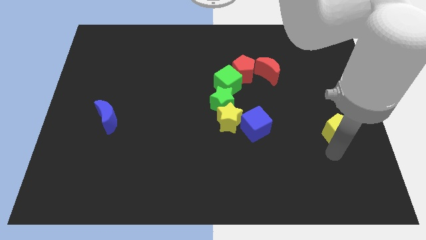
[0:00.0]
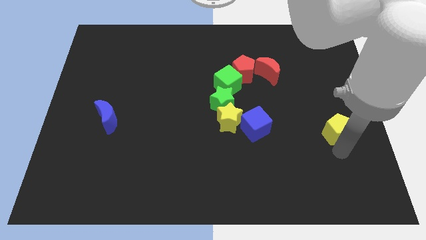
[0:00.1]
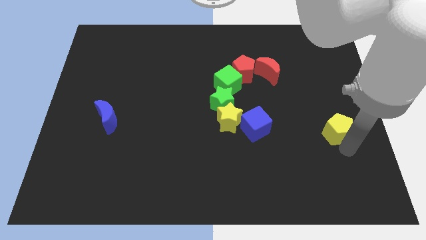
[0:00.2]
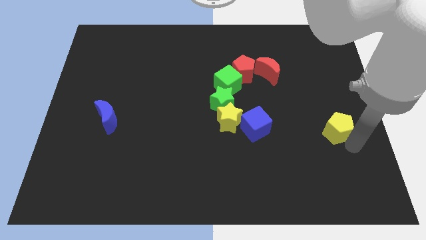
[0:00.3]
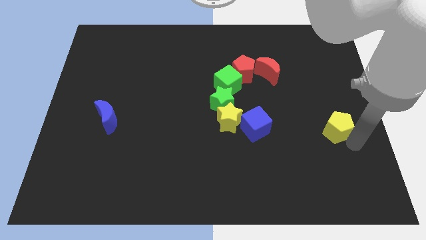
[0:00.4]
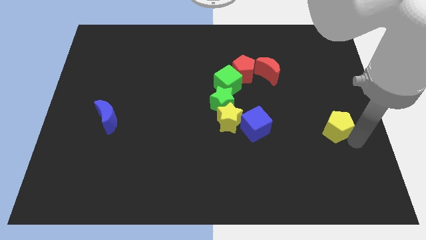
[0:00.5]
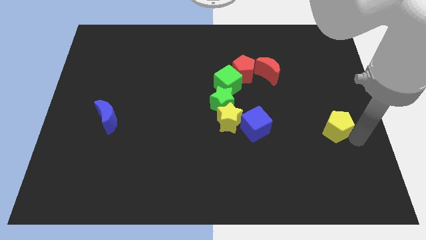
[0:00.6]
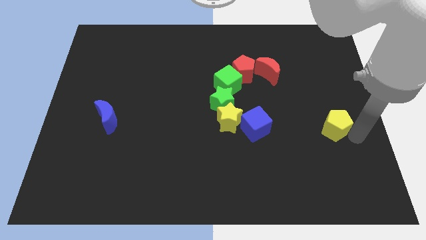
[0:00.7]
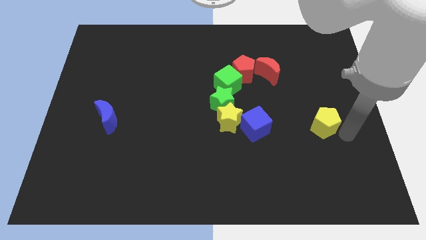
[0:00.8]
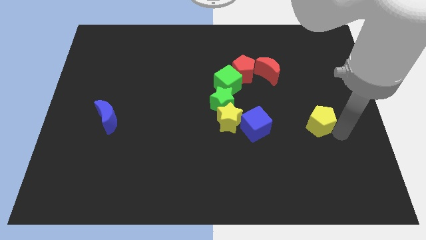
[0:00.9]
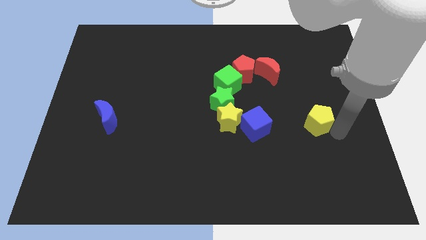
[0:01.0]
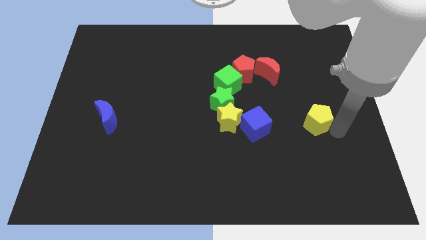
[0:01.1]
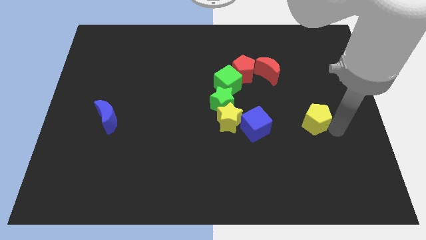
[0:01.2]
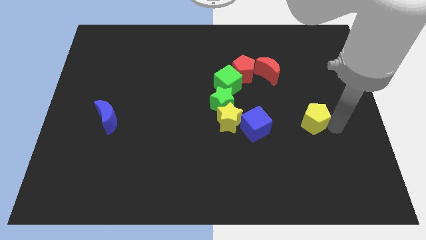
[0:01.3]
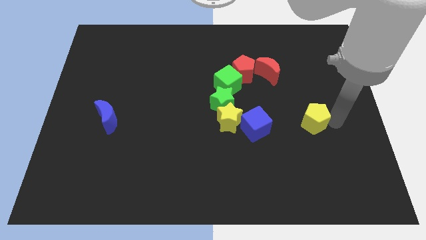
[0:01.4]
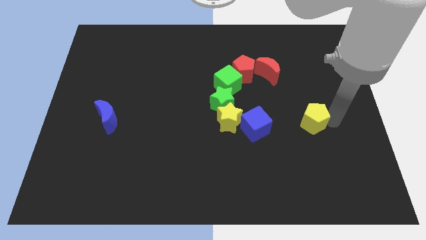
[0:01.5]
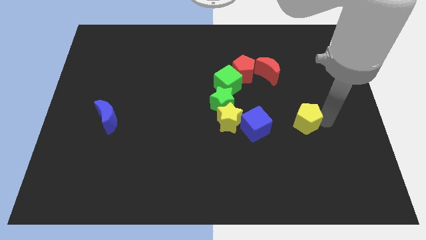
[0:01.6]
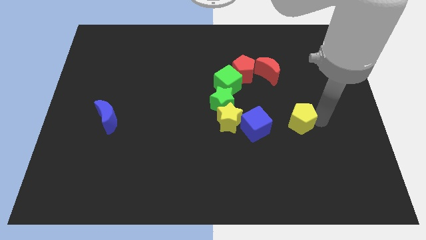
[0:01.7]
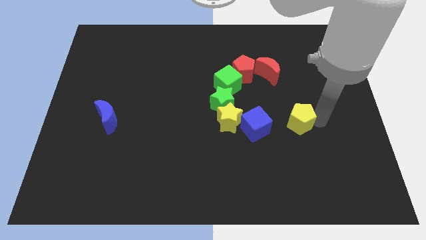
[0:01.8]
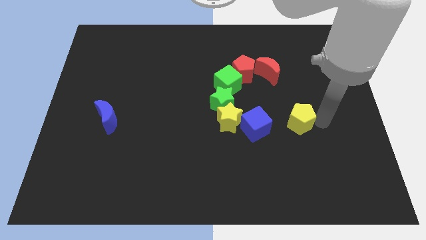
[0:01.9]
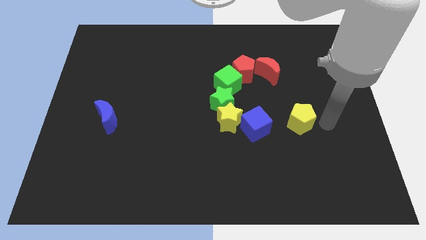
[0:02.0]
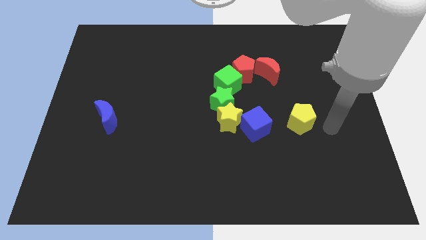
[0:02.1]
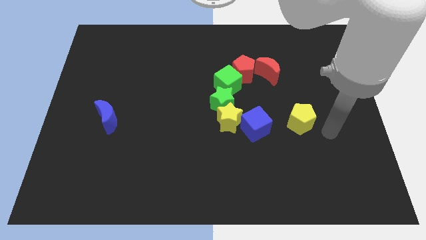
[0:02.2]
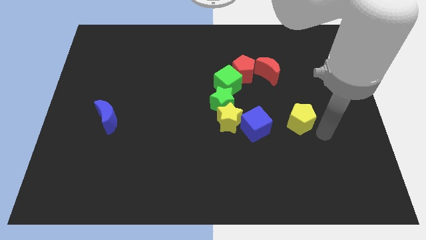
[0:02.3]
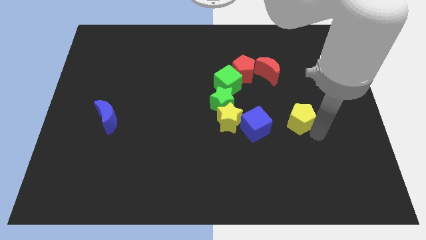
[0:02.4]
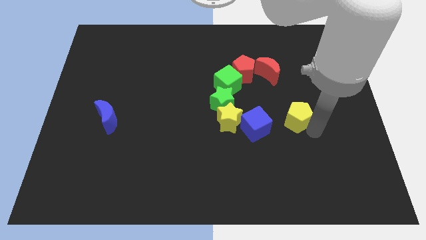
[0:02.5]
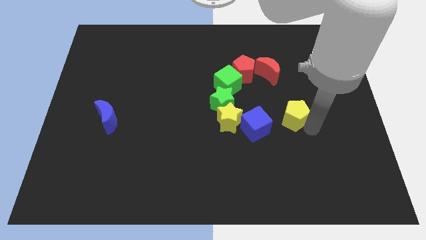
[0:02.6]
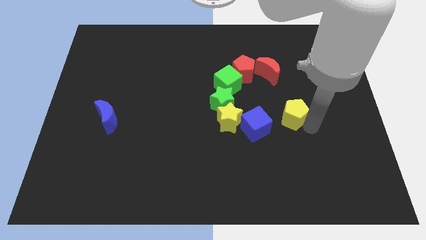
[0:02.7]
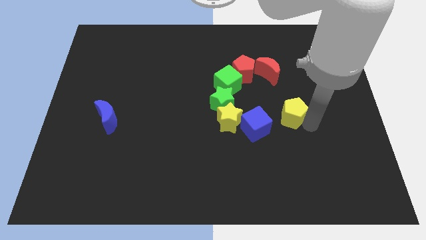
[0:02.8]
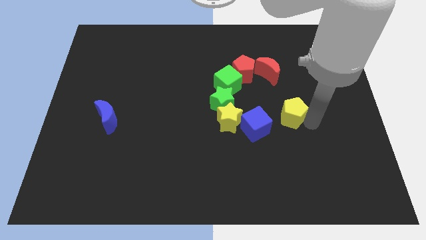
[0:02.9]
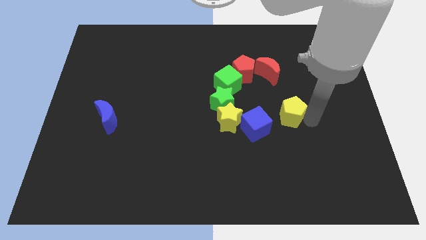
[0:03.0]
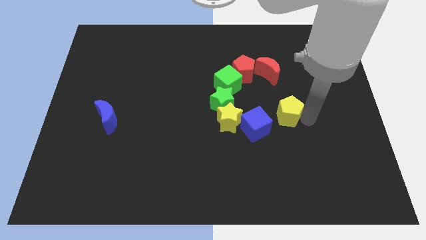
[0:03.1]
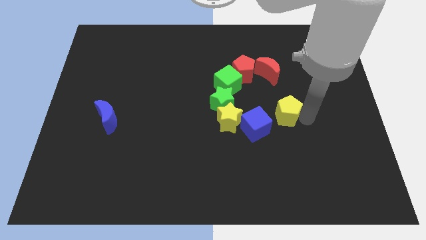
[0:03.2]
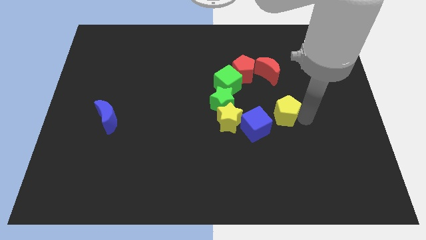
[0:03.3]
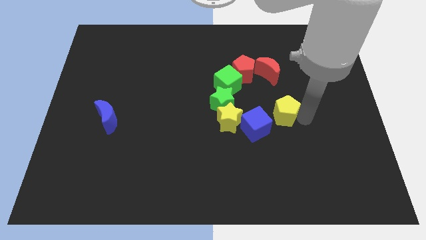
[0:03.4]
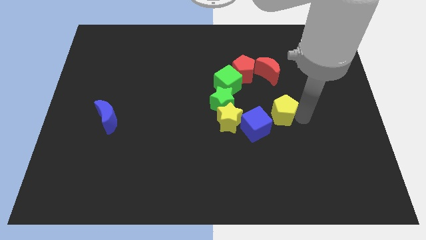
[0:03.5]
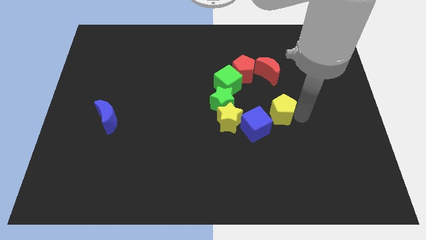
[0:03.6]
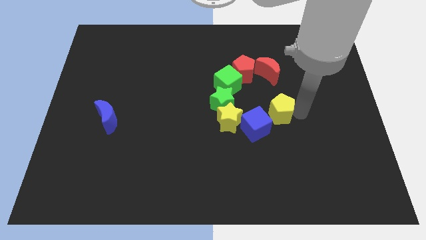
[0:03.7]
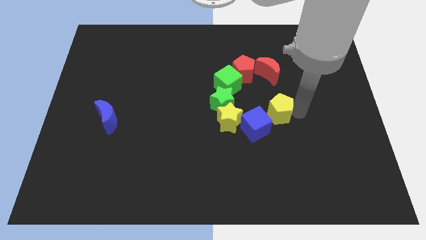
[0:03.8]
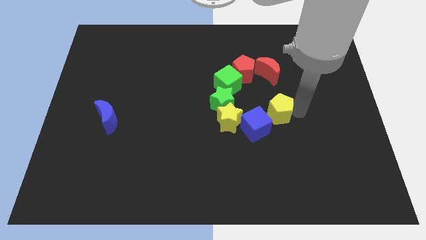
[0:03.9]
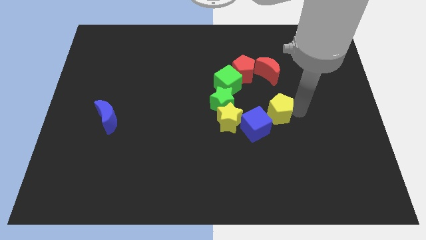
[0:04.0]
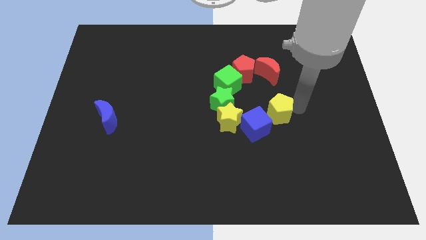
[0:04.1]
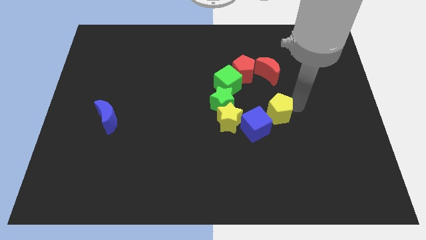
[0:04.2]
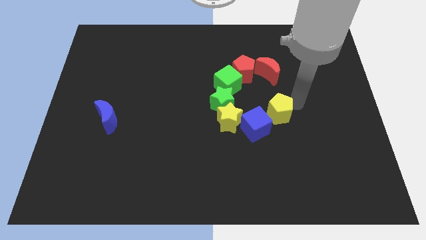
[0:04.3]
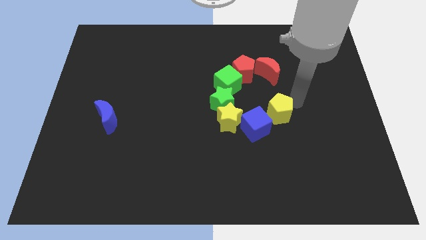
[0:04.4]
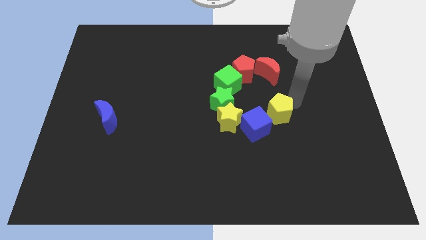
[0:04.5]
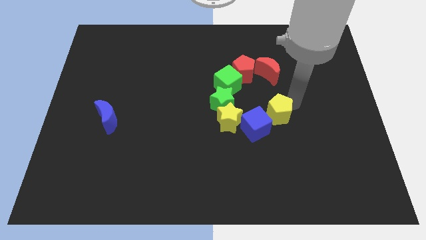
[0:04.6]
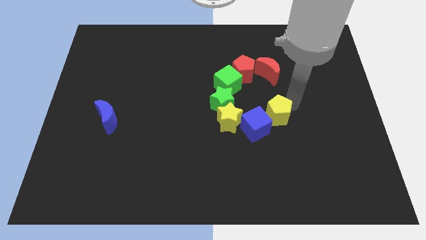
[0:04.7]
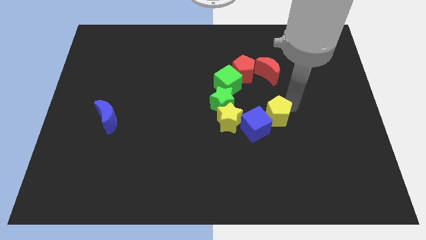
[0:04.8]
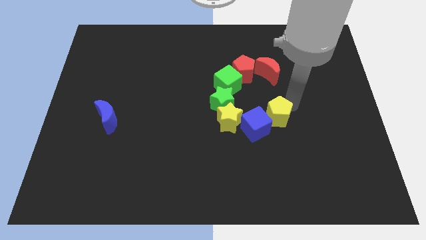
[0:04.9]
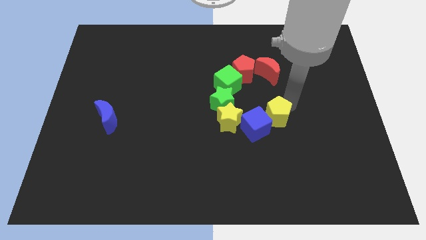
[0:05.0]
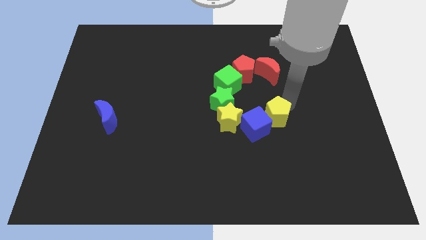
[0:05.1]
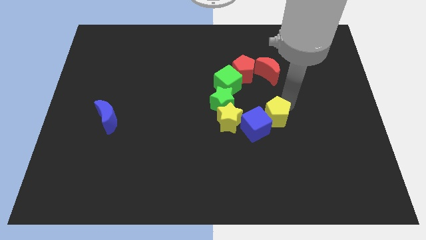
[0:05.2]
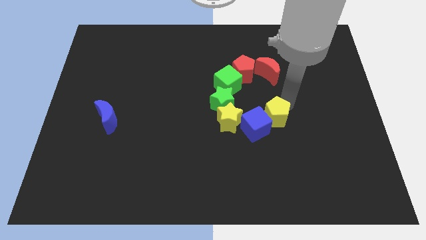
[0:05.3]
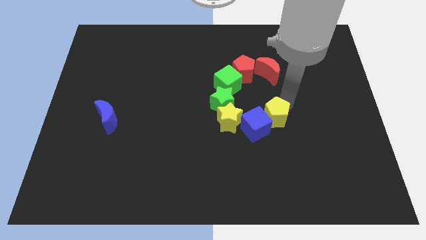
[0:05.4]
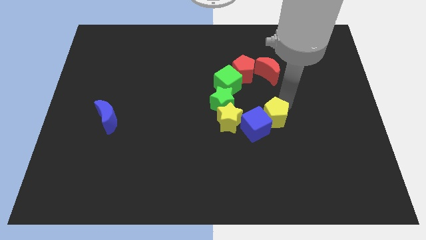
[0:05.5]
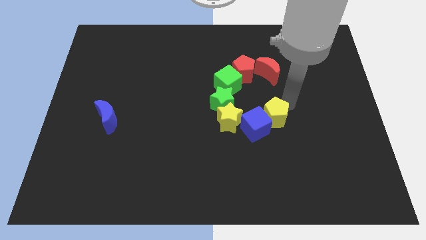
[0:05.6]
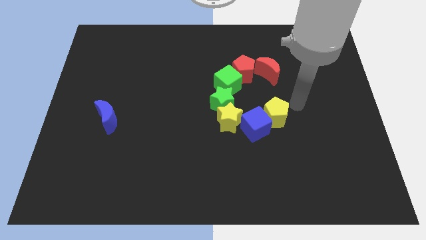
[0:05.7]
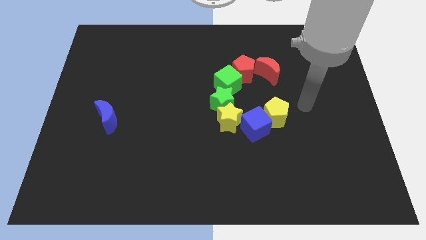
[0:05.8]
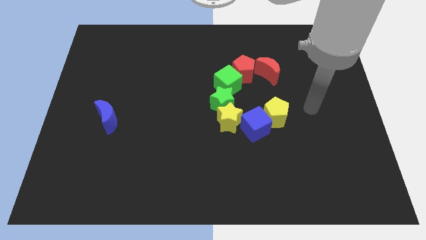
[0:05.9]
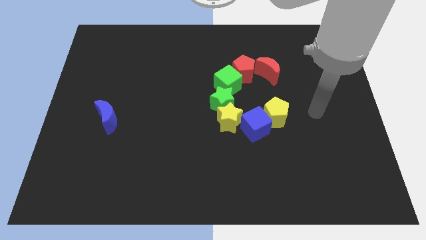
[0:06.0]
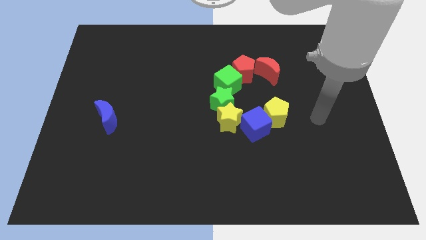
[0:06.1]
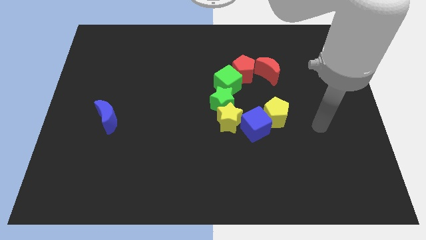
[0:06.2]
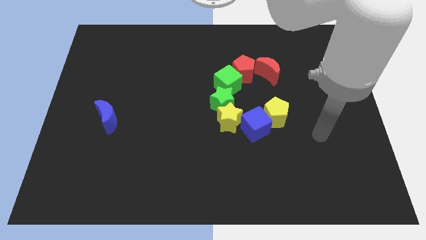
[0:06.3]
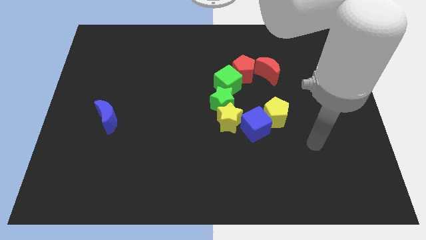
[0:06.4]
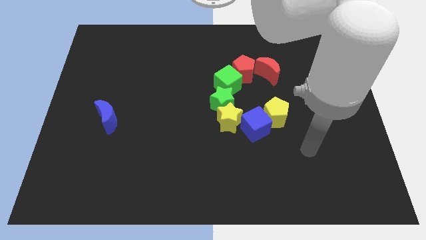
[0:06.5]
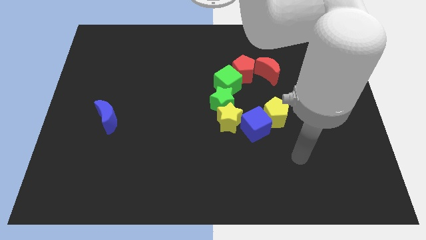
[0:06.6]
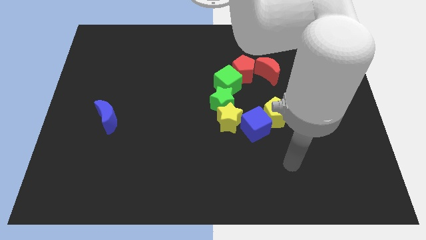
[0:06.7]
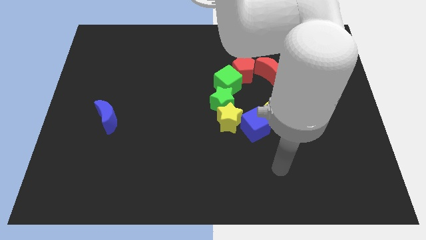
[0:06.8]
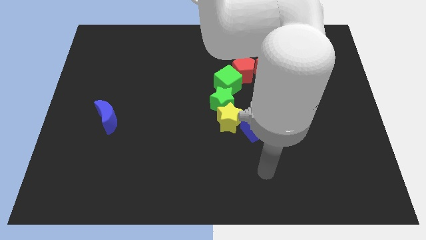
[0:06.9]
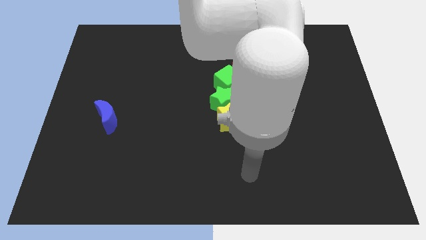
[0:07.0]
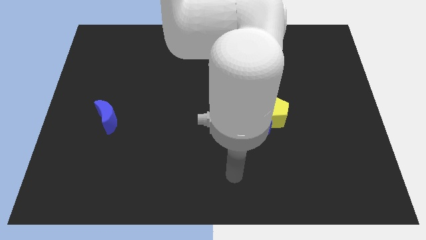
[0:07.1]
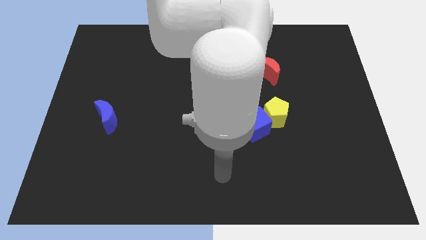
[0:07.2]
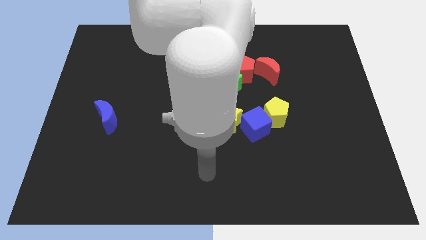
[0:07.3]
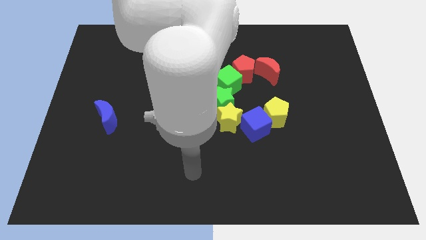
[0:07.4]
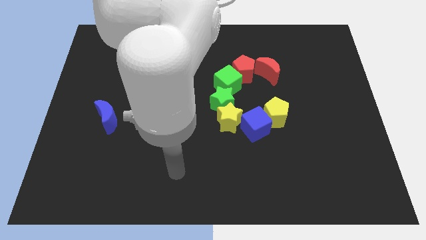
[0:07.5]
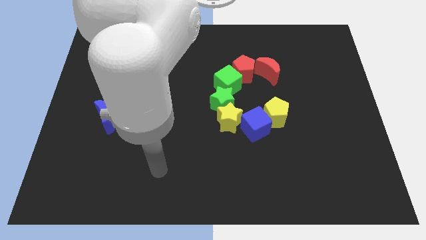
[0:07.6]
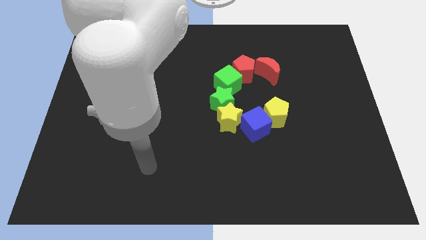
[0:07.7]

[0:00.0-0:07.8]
place yellow pentagon close to blue cube

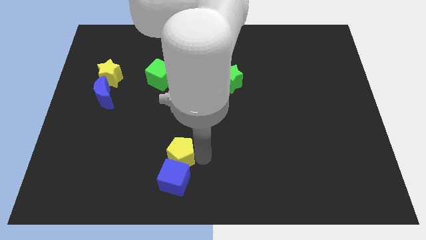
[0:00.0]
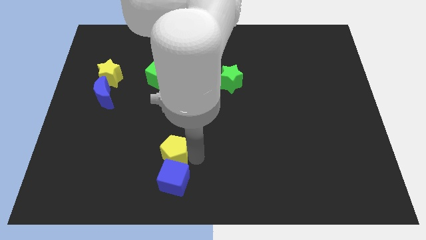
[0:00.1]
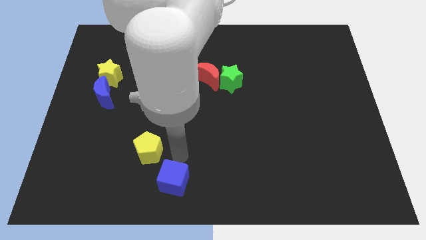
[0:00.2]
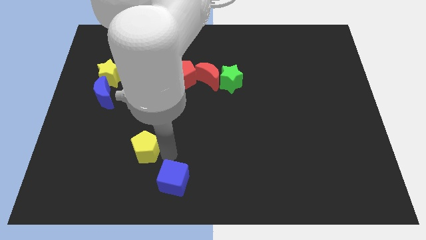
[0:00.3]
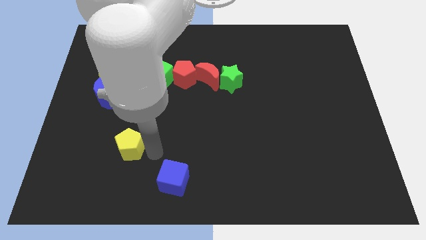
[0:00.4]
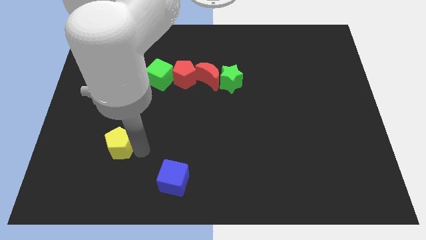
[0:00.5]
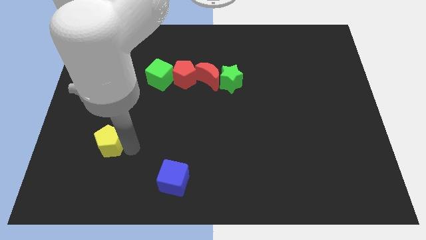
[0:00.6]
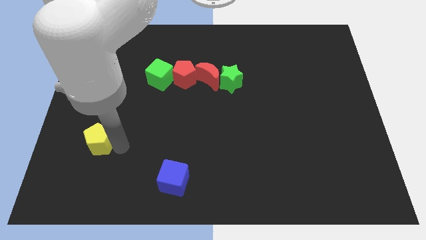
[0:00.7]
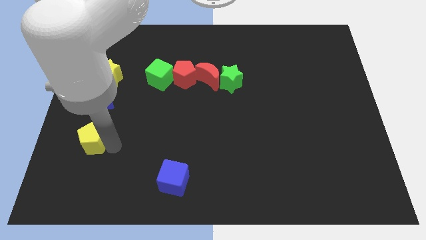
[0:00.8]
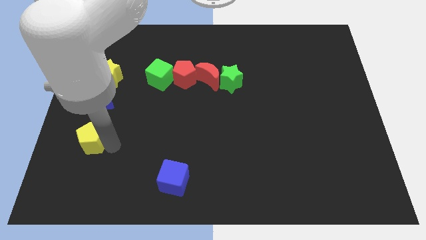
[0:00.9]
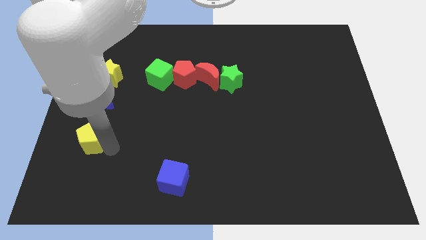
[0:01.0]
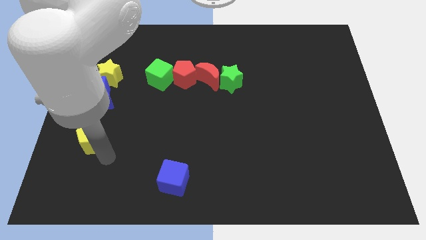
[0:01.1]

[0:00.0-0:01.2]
push yellow pentagon towards the left
